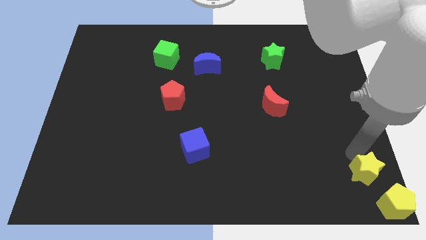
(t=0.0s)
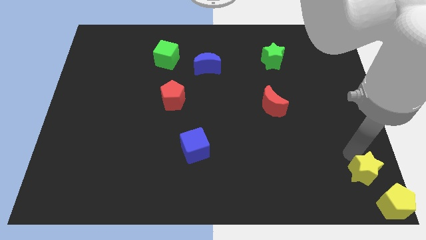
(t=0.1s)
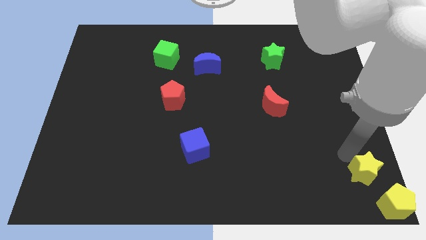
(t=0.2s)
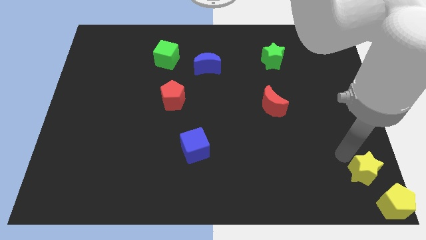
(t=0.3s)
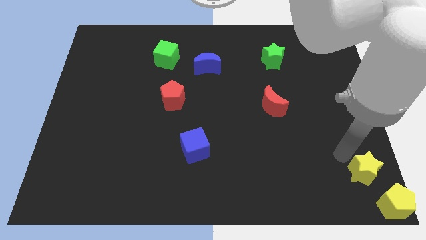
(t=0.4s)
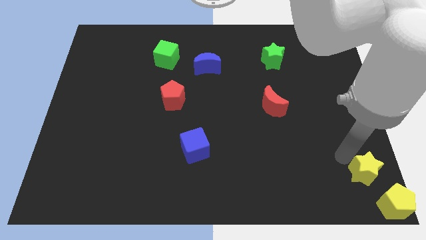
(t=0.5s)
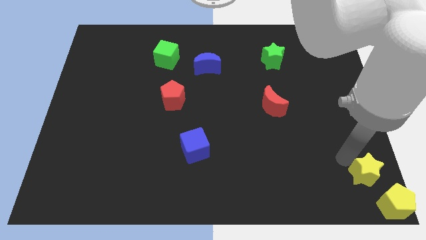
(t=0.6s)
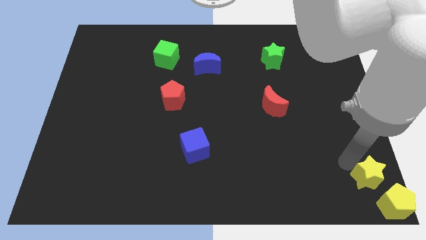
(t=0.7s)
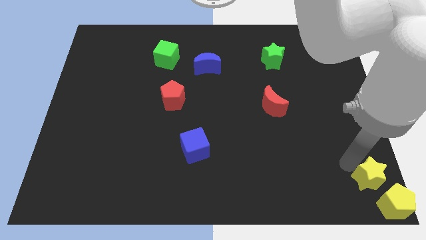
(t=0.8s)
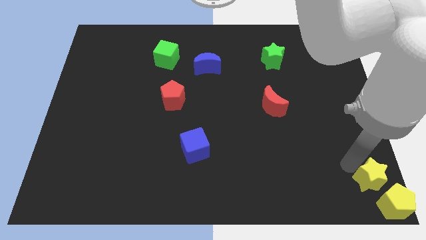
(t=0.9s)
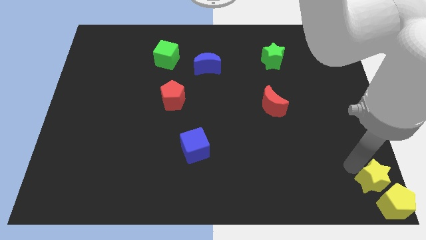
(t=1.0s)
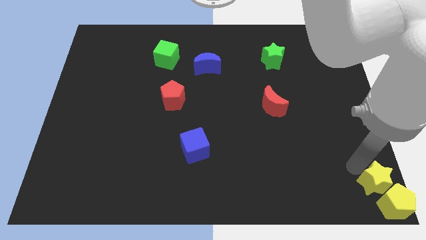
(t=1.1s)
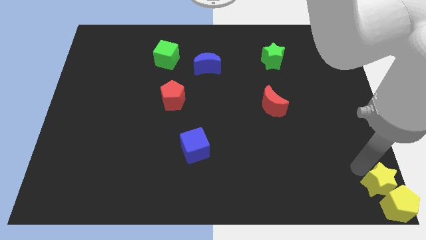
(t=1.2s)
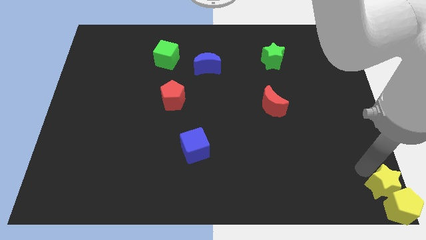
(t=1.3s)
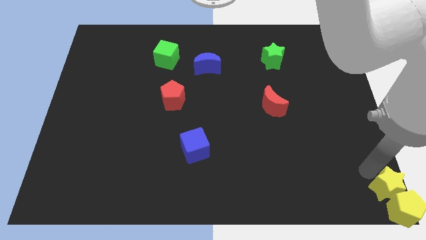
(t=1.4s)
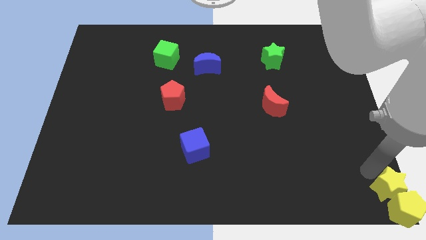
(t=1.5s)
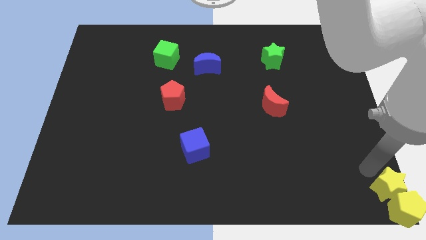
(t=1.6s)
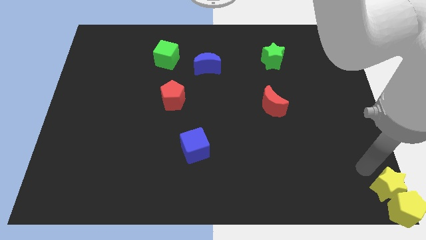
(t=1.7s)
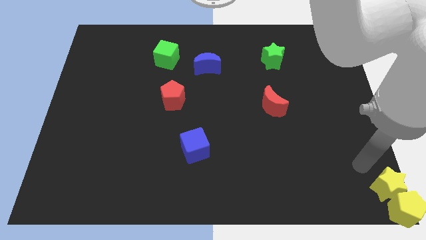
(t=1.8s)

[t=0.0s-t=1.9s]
push the yellow star into the yellow pentagon

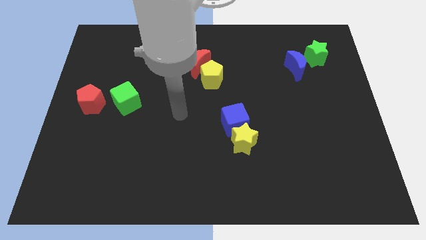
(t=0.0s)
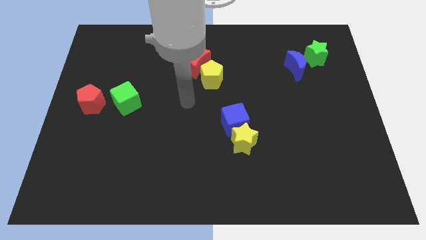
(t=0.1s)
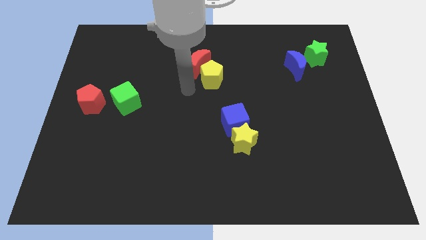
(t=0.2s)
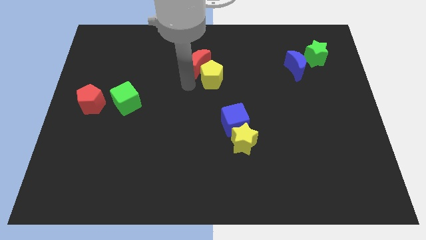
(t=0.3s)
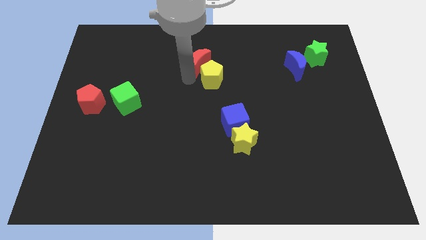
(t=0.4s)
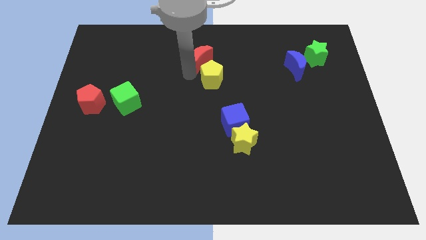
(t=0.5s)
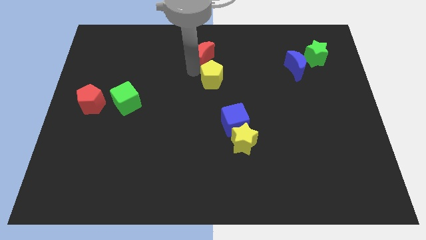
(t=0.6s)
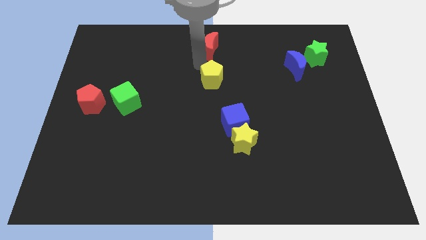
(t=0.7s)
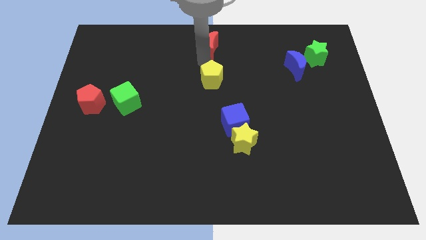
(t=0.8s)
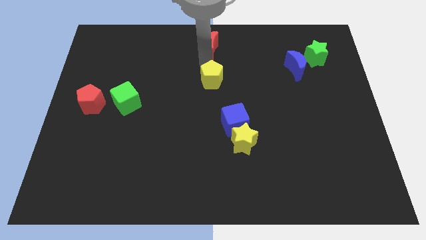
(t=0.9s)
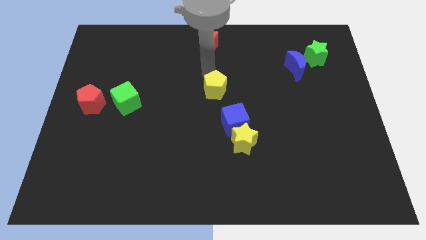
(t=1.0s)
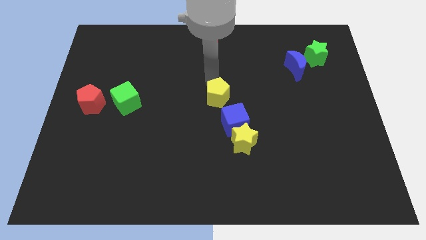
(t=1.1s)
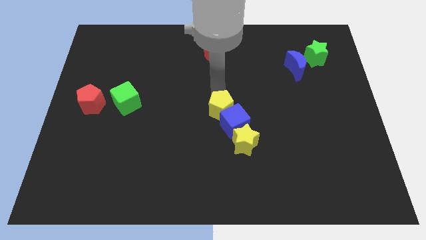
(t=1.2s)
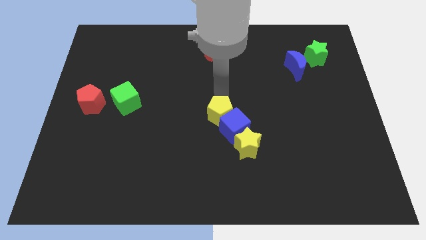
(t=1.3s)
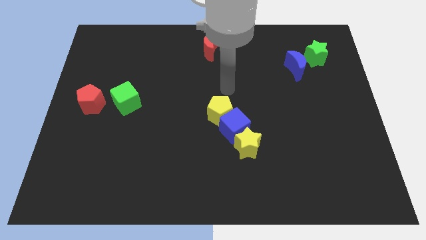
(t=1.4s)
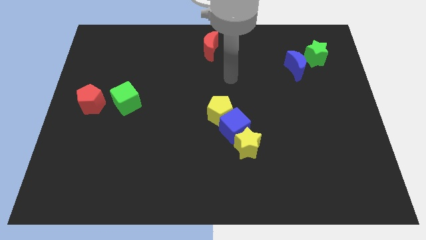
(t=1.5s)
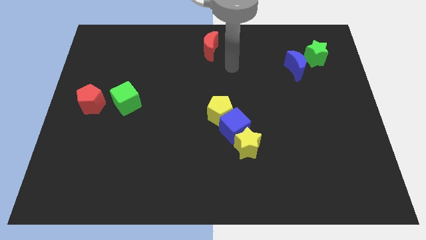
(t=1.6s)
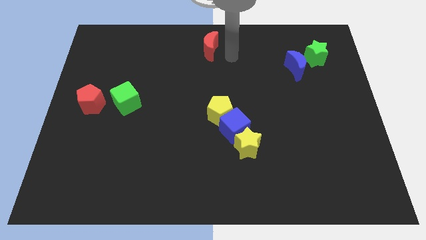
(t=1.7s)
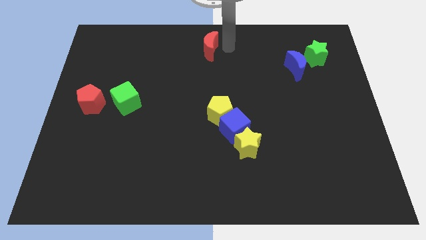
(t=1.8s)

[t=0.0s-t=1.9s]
push the yellow pentagon in to blue cube

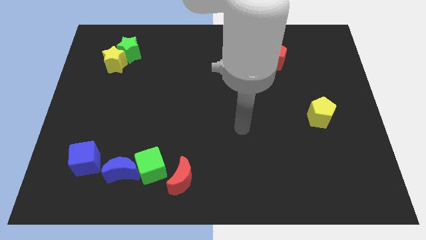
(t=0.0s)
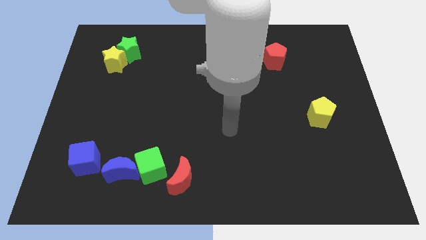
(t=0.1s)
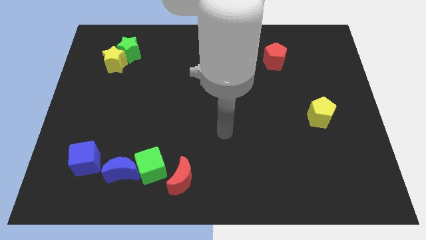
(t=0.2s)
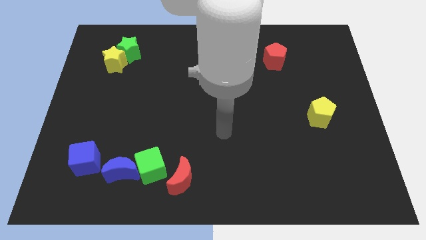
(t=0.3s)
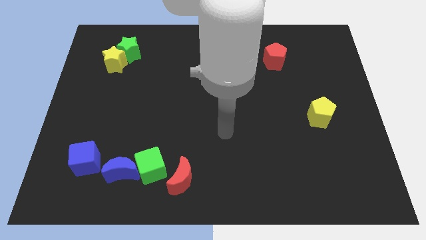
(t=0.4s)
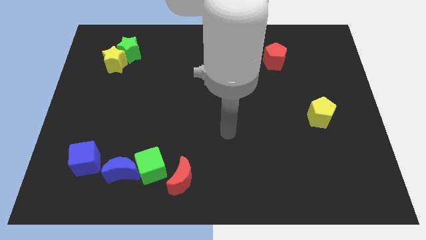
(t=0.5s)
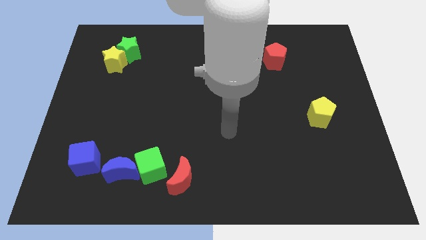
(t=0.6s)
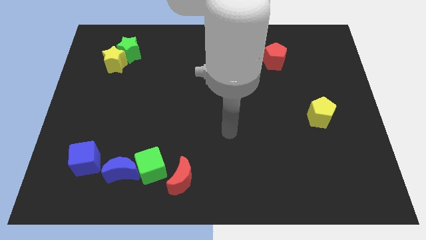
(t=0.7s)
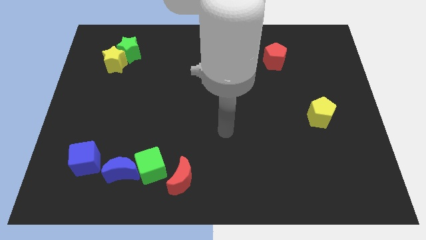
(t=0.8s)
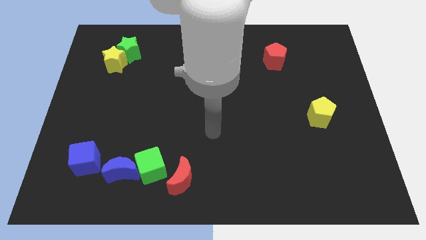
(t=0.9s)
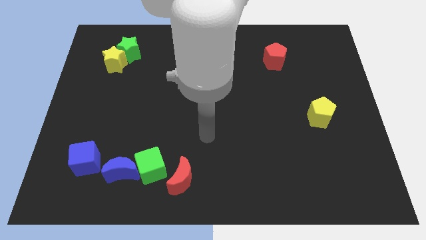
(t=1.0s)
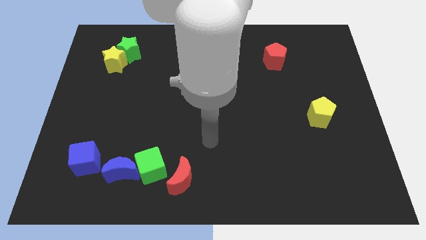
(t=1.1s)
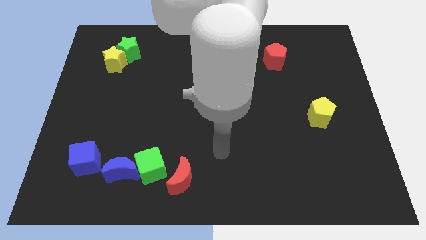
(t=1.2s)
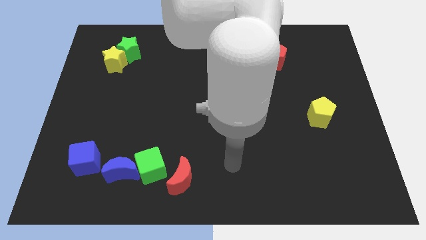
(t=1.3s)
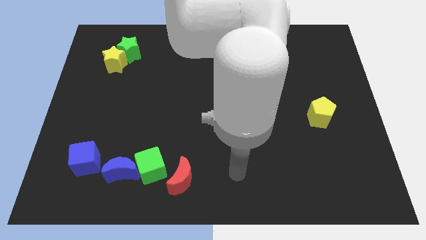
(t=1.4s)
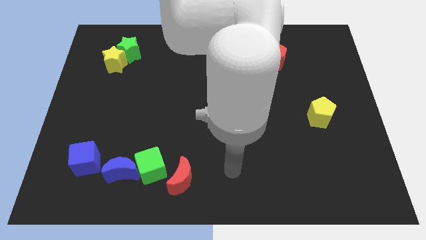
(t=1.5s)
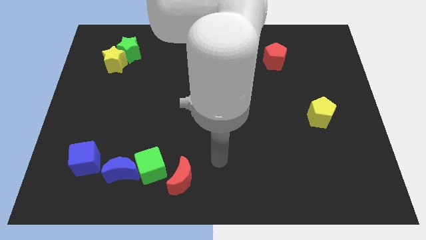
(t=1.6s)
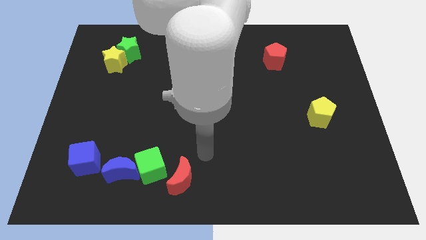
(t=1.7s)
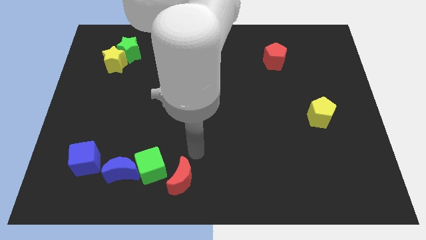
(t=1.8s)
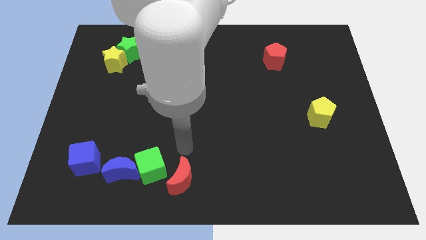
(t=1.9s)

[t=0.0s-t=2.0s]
point your arm above the red moon

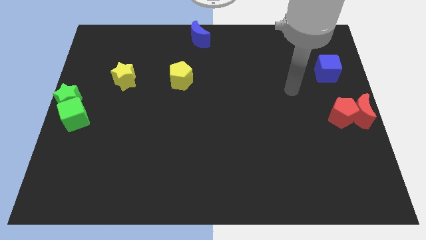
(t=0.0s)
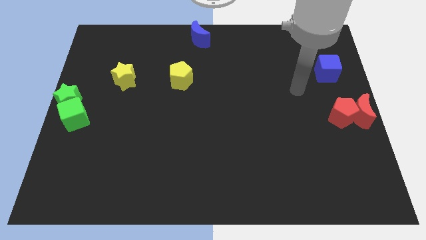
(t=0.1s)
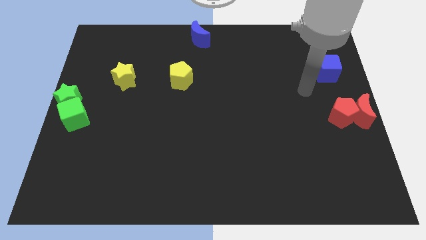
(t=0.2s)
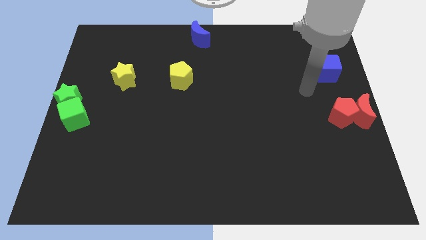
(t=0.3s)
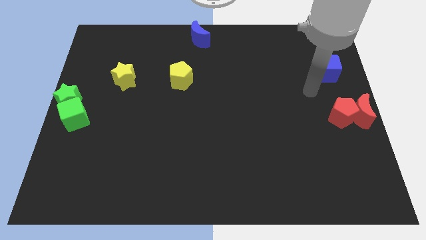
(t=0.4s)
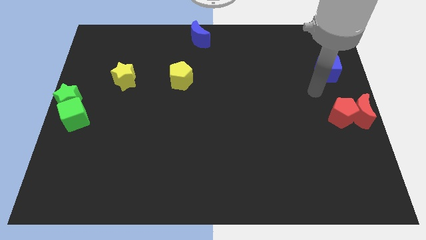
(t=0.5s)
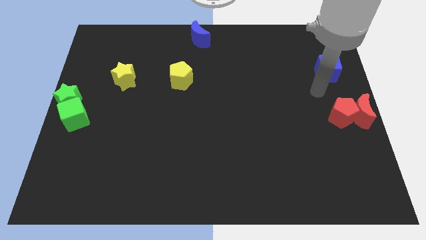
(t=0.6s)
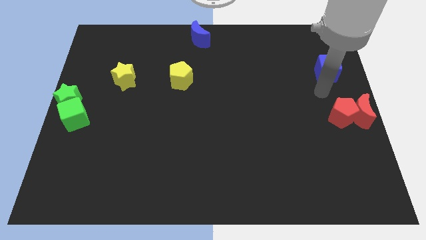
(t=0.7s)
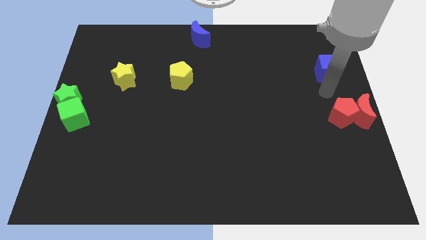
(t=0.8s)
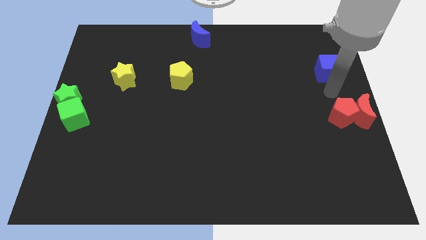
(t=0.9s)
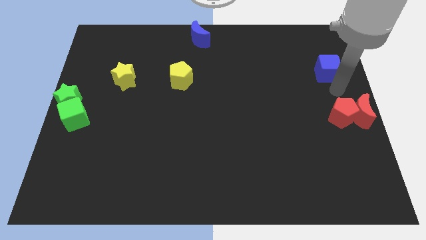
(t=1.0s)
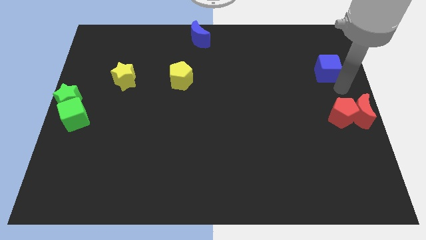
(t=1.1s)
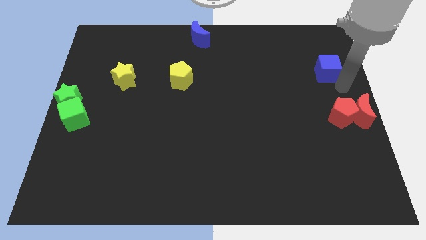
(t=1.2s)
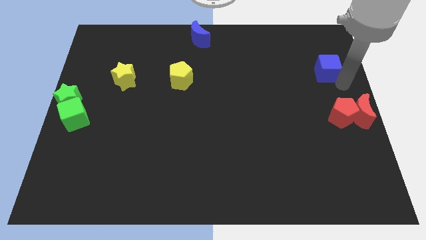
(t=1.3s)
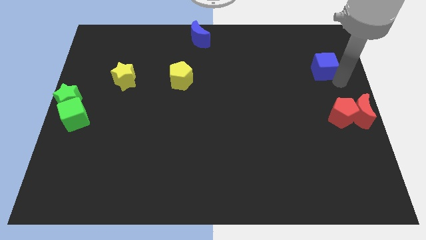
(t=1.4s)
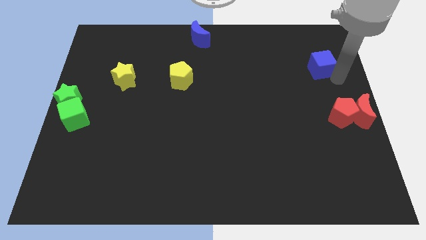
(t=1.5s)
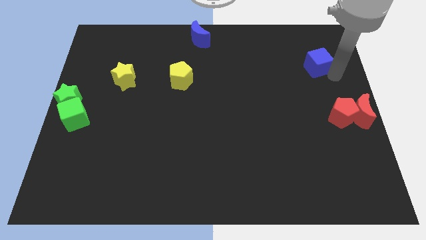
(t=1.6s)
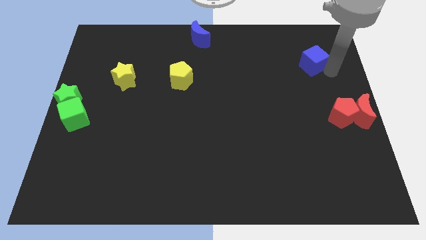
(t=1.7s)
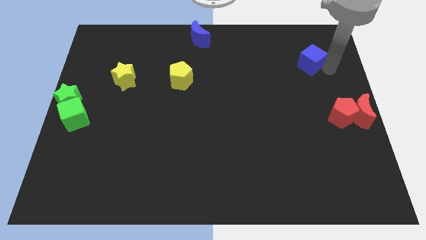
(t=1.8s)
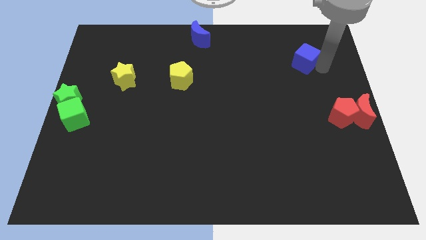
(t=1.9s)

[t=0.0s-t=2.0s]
push the blue cube towards the top

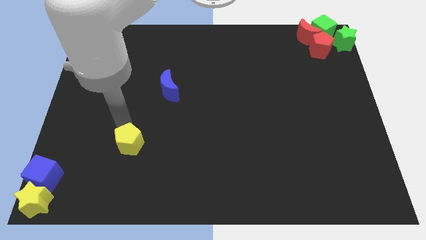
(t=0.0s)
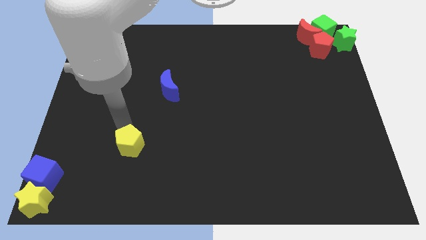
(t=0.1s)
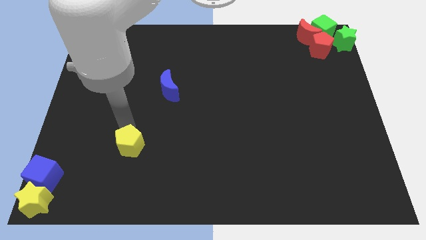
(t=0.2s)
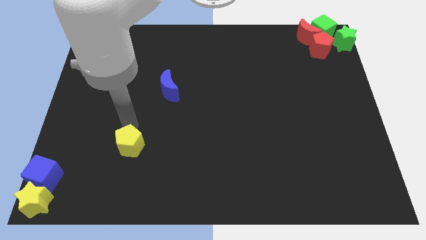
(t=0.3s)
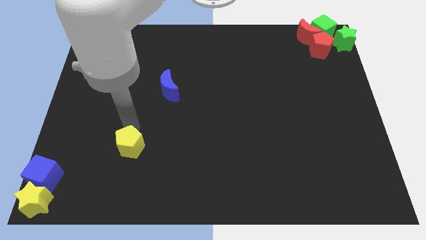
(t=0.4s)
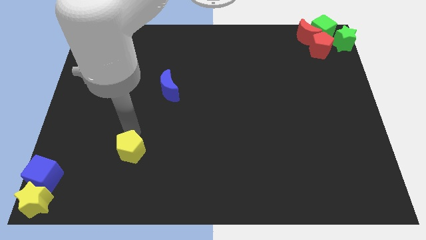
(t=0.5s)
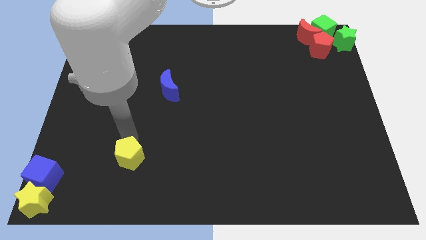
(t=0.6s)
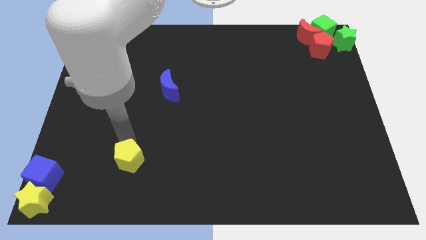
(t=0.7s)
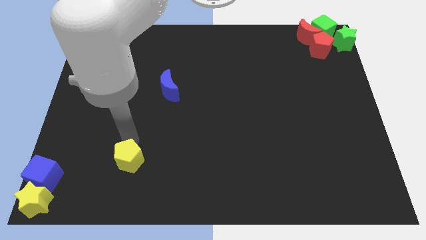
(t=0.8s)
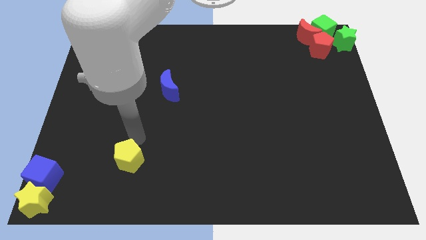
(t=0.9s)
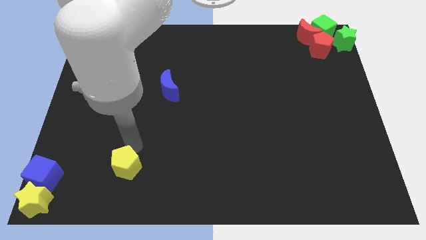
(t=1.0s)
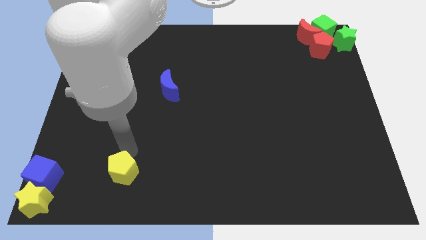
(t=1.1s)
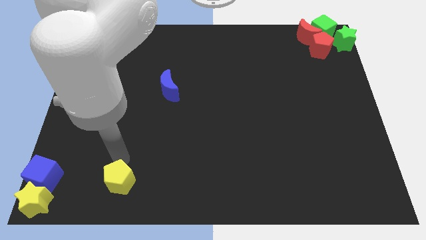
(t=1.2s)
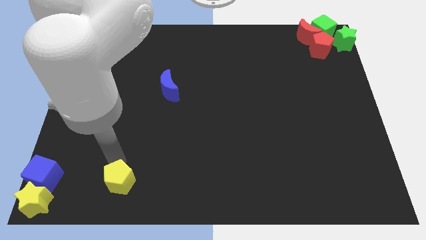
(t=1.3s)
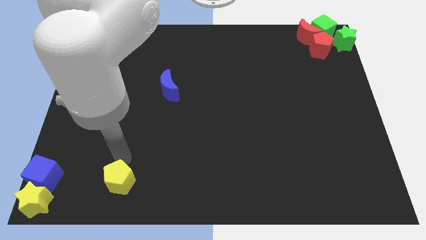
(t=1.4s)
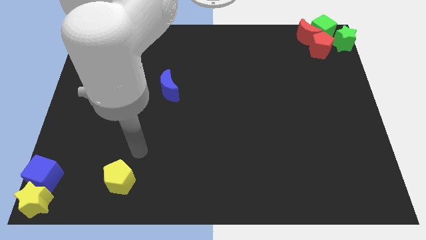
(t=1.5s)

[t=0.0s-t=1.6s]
push the yellow pentagon to the bottom of the board
